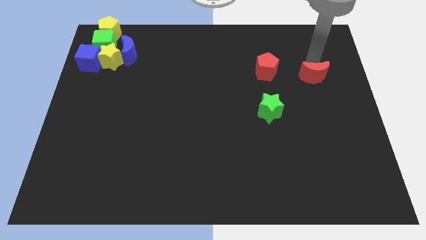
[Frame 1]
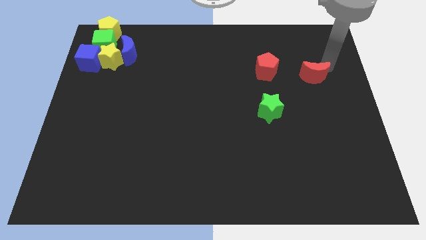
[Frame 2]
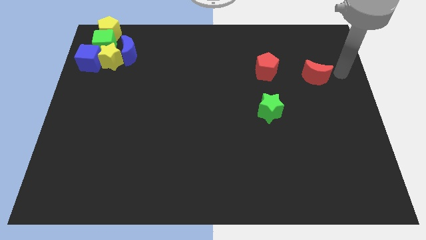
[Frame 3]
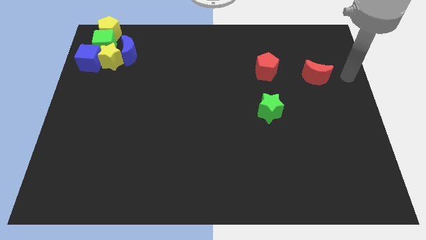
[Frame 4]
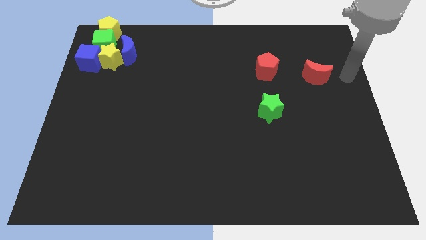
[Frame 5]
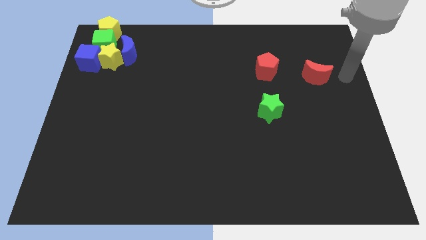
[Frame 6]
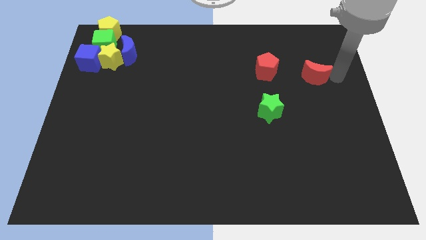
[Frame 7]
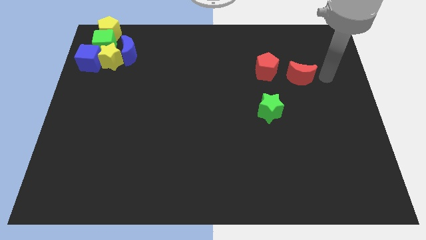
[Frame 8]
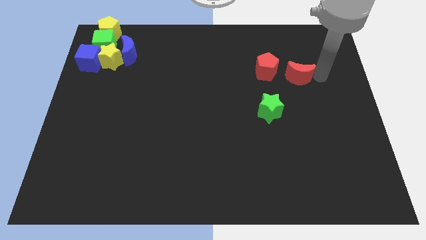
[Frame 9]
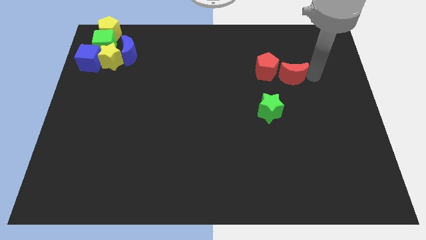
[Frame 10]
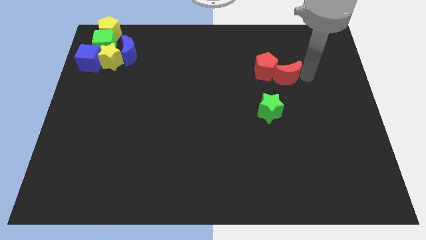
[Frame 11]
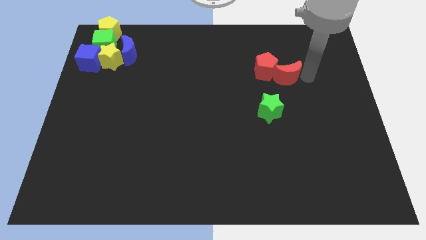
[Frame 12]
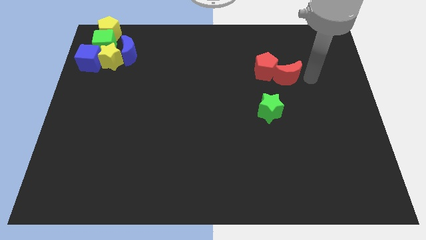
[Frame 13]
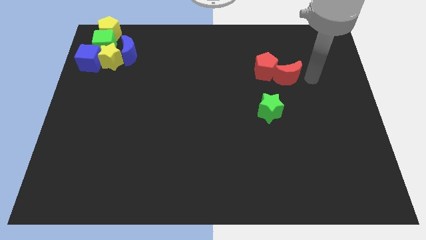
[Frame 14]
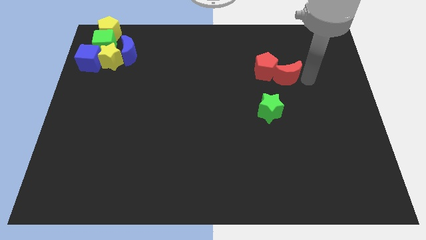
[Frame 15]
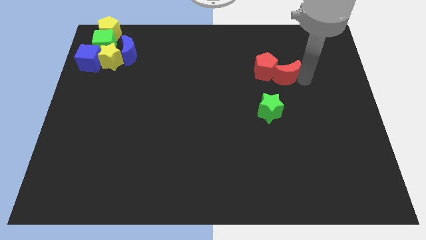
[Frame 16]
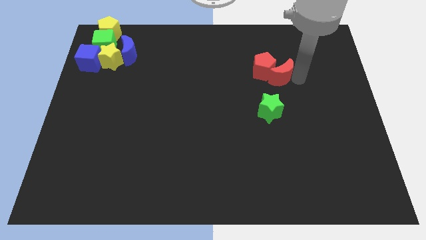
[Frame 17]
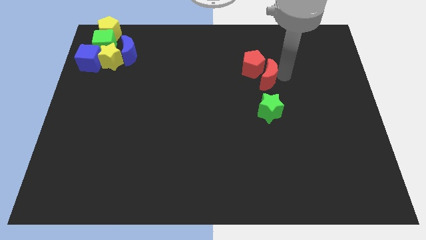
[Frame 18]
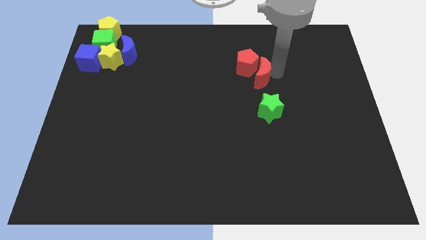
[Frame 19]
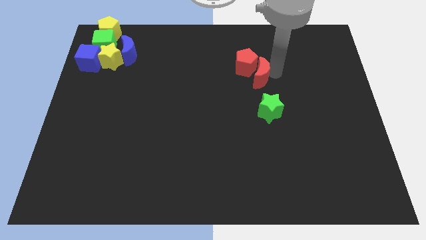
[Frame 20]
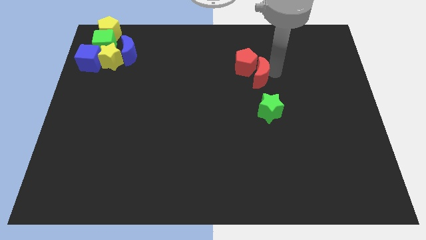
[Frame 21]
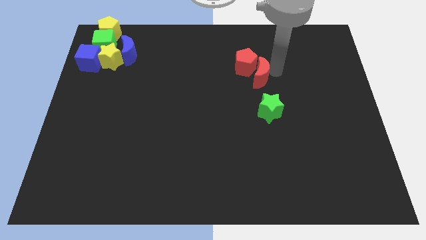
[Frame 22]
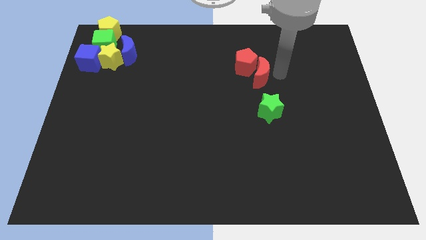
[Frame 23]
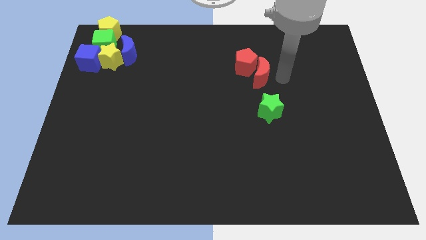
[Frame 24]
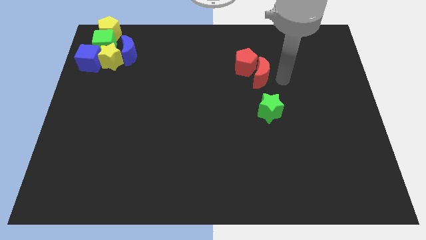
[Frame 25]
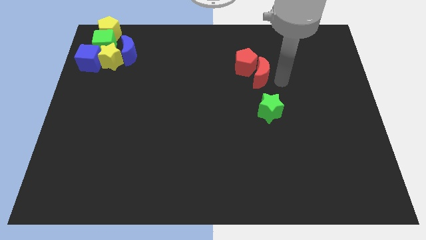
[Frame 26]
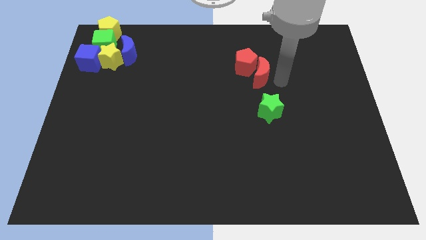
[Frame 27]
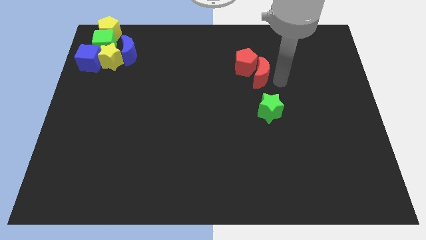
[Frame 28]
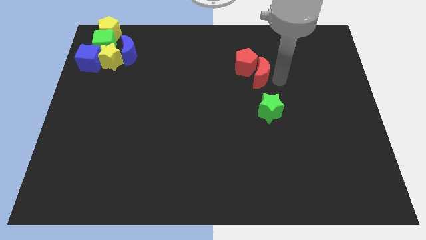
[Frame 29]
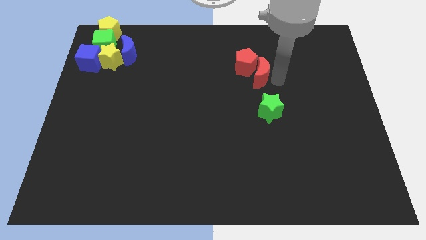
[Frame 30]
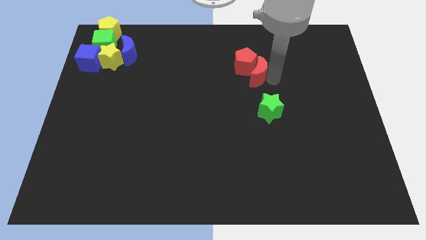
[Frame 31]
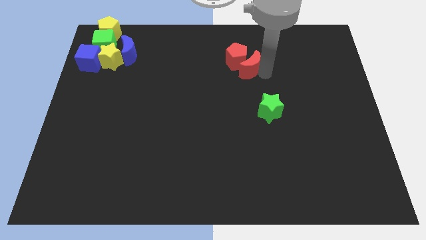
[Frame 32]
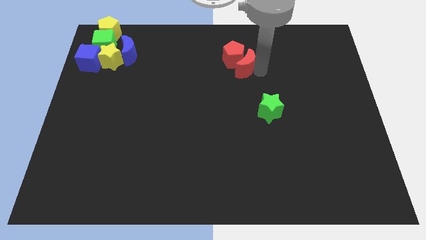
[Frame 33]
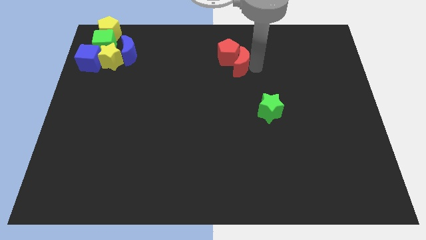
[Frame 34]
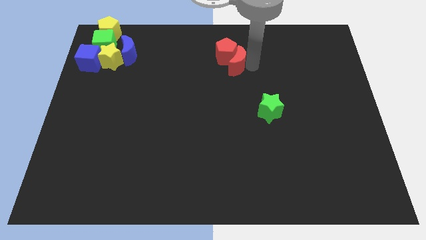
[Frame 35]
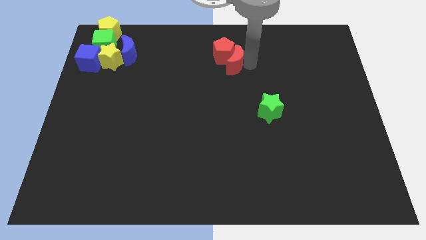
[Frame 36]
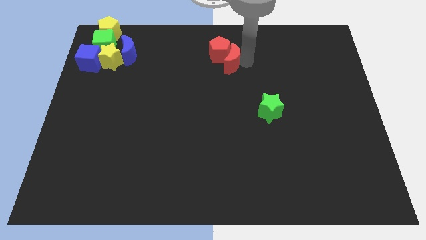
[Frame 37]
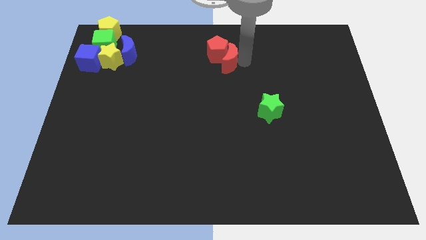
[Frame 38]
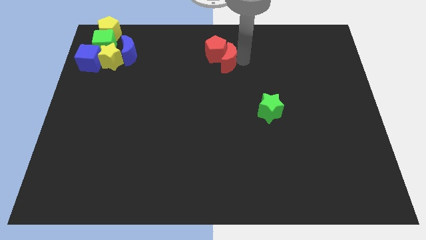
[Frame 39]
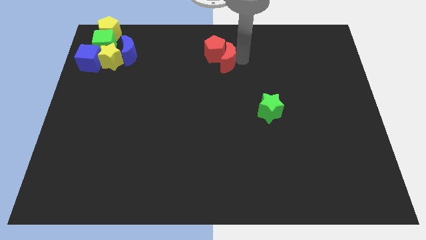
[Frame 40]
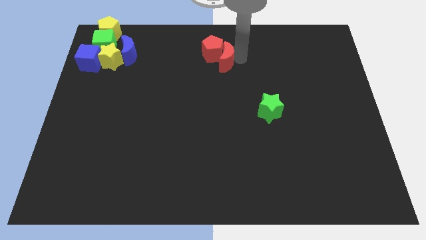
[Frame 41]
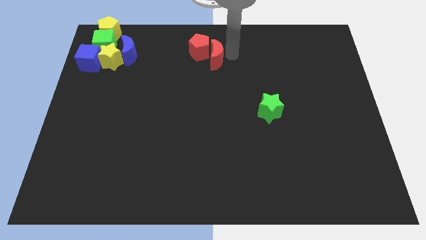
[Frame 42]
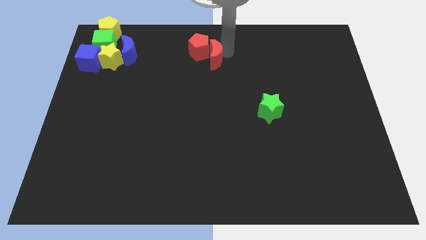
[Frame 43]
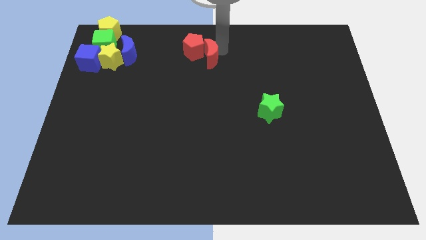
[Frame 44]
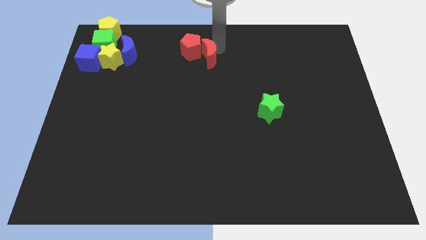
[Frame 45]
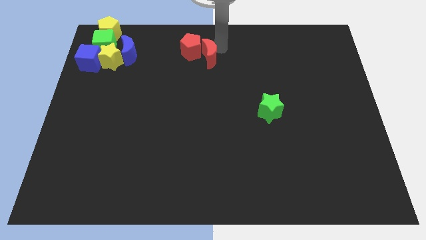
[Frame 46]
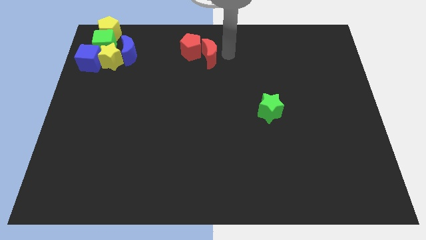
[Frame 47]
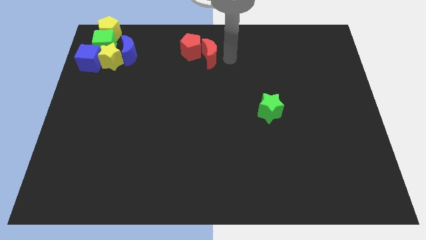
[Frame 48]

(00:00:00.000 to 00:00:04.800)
push red pentagon along with red crescent towards the blue crescent

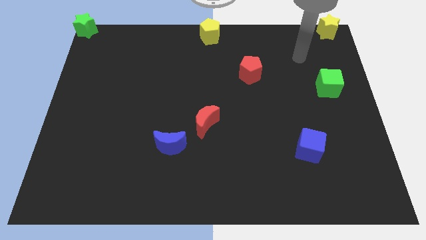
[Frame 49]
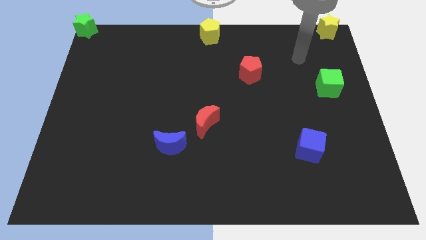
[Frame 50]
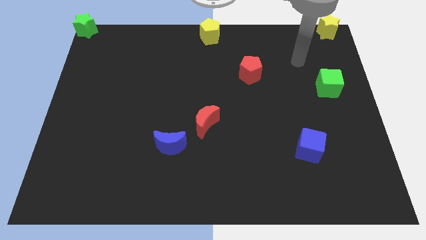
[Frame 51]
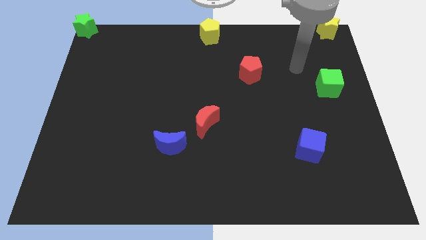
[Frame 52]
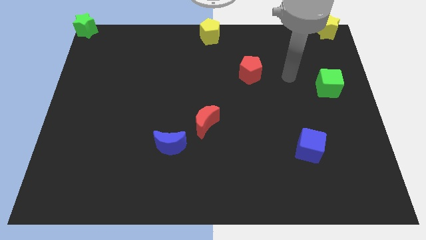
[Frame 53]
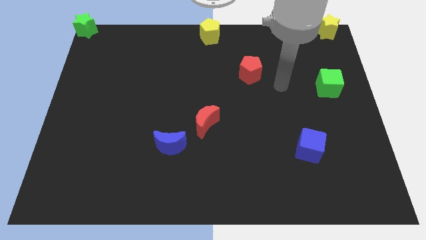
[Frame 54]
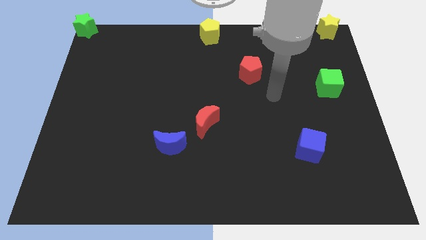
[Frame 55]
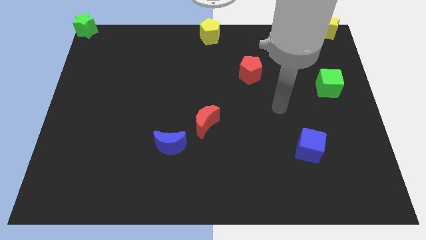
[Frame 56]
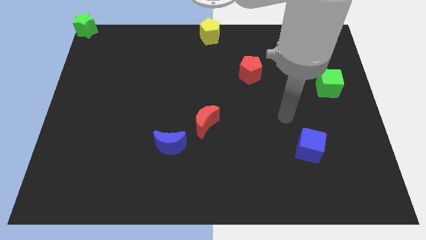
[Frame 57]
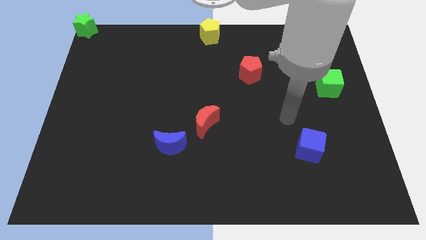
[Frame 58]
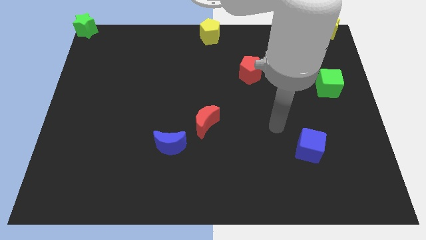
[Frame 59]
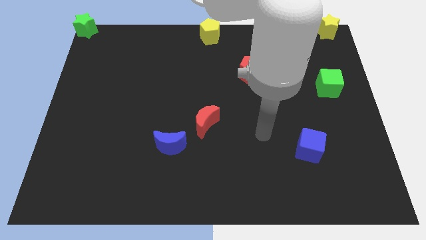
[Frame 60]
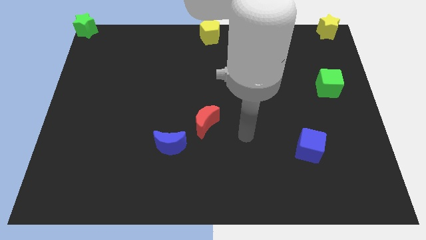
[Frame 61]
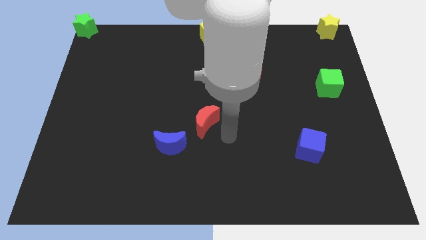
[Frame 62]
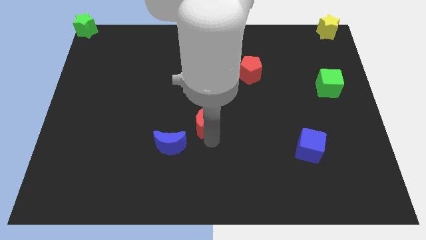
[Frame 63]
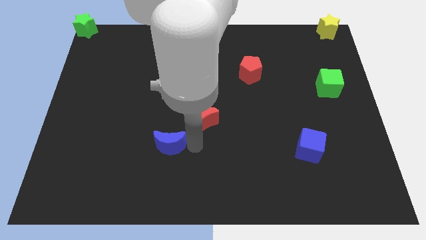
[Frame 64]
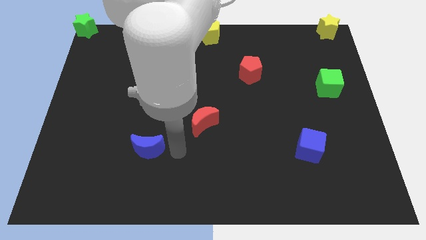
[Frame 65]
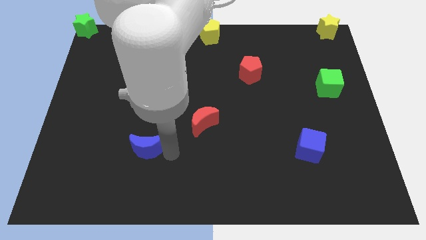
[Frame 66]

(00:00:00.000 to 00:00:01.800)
push blue moon towards left

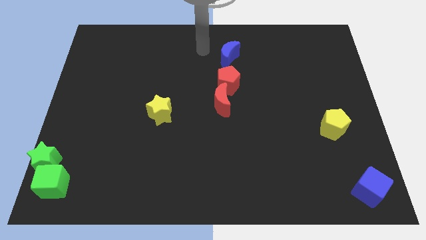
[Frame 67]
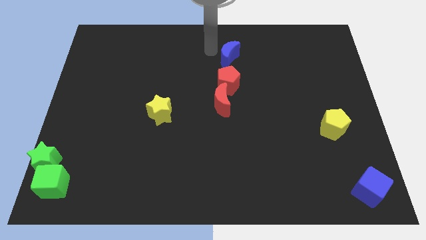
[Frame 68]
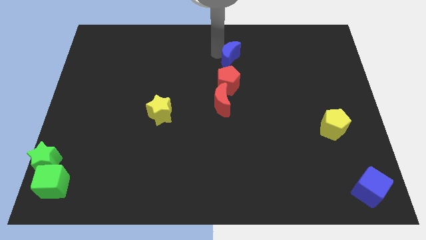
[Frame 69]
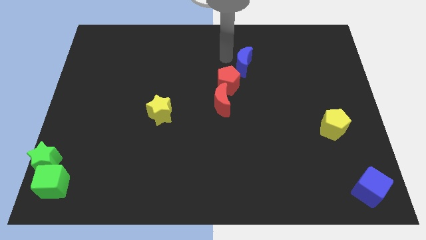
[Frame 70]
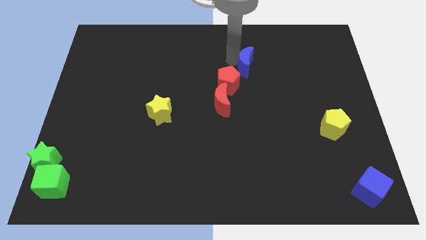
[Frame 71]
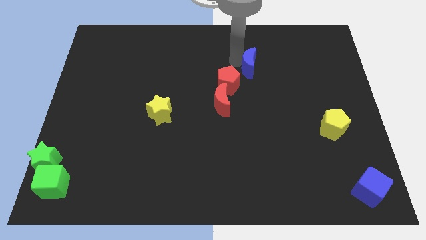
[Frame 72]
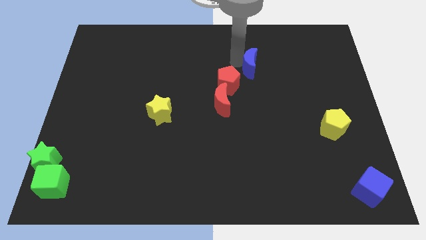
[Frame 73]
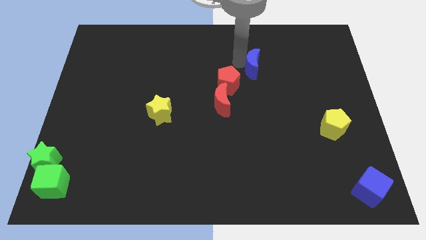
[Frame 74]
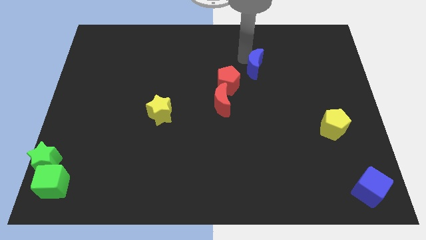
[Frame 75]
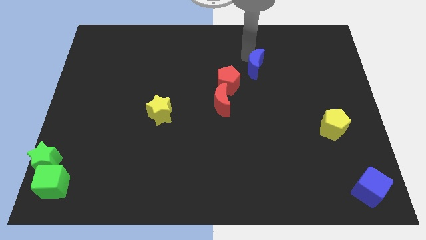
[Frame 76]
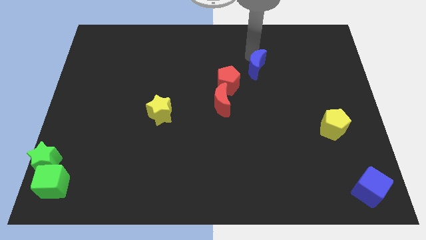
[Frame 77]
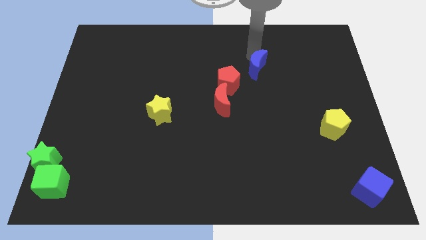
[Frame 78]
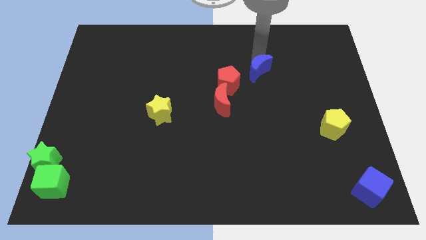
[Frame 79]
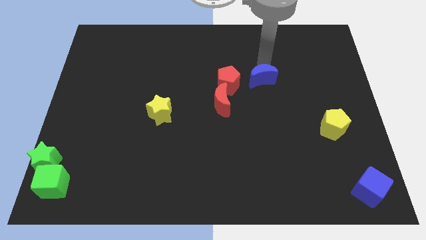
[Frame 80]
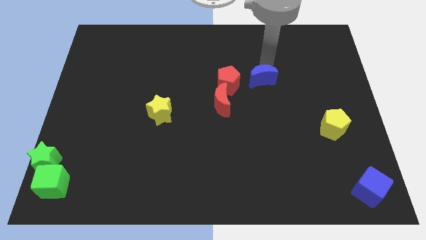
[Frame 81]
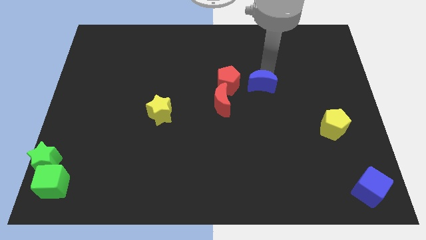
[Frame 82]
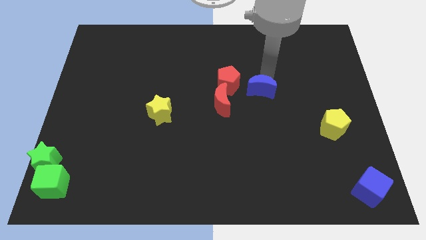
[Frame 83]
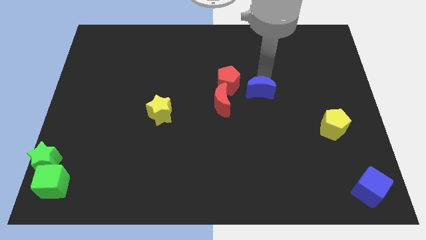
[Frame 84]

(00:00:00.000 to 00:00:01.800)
move the blue moon right to the red pentagon

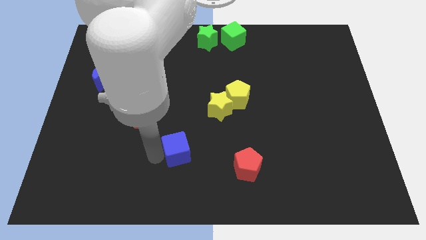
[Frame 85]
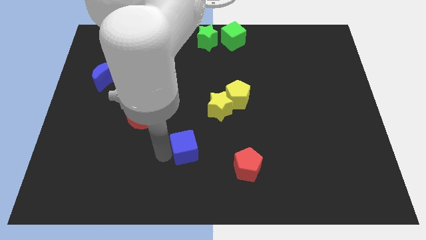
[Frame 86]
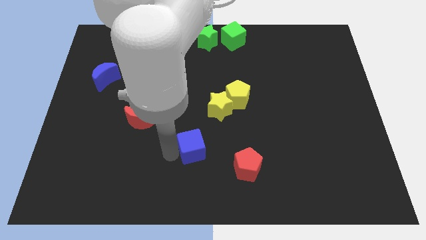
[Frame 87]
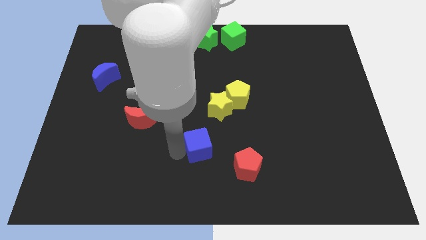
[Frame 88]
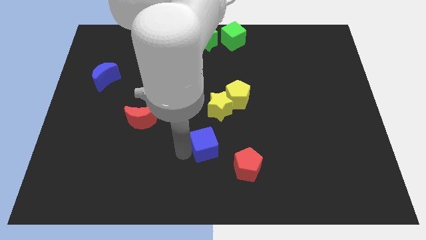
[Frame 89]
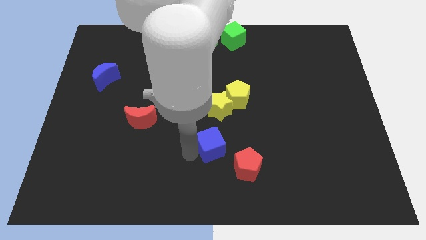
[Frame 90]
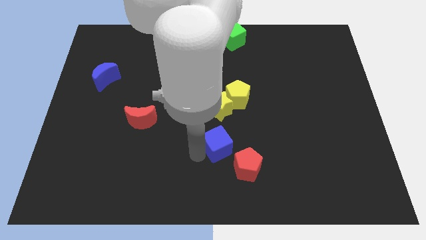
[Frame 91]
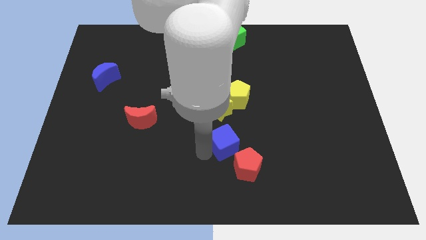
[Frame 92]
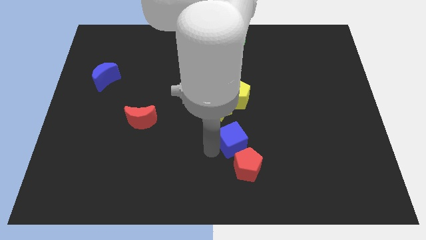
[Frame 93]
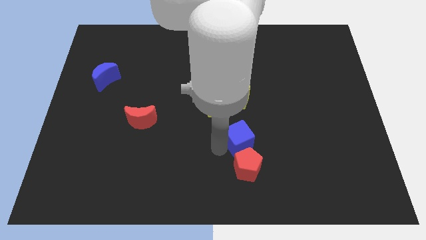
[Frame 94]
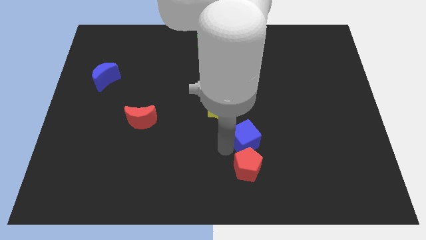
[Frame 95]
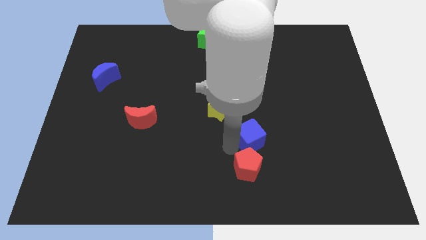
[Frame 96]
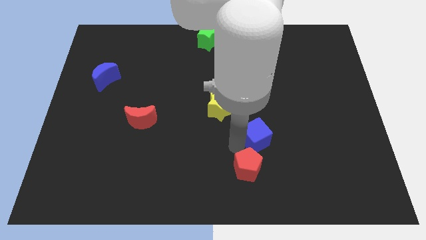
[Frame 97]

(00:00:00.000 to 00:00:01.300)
put the blue cube above the red pentagon
